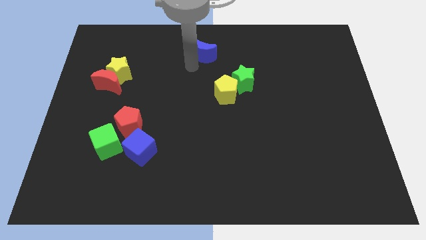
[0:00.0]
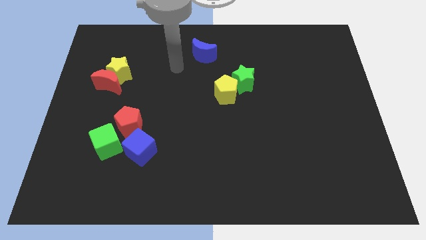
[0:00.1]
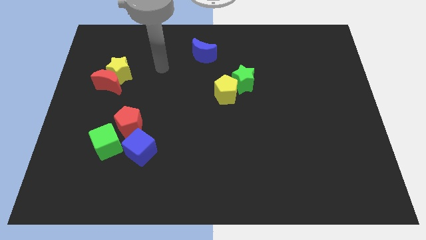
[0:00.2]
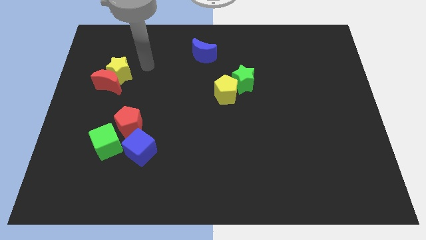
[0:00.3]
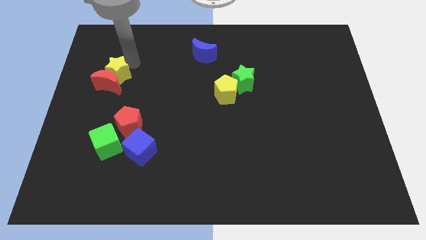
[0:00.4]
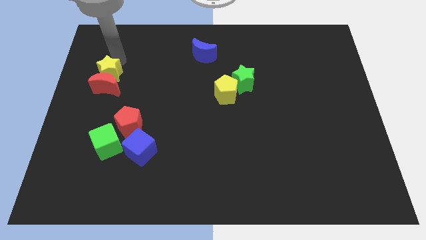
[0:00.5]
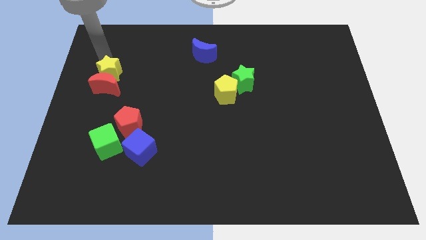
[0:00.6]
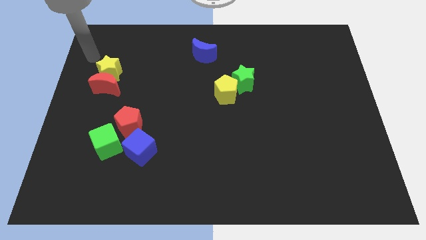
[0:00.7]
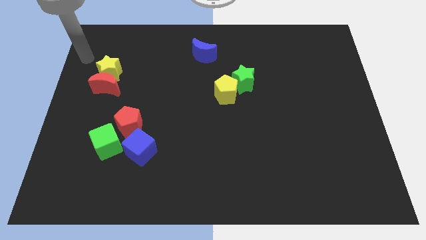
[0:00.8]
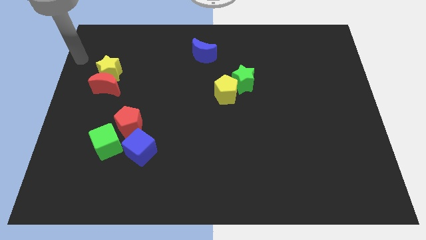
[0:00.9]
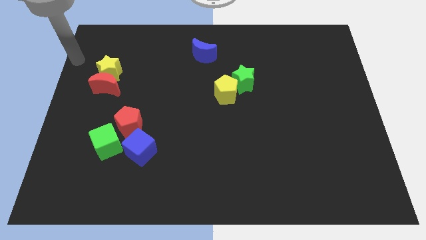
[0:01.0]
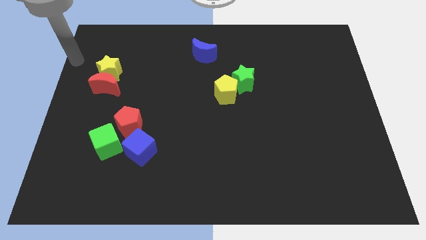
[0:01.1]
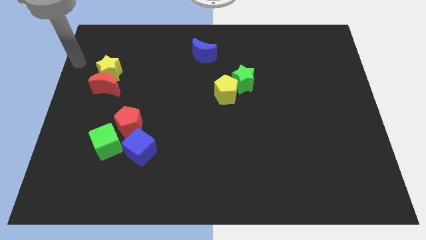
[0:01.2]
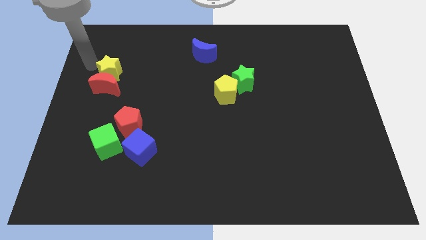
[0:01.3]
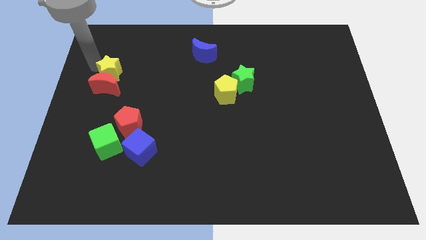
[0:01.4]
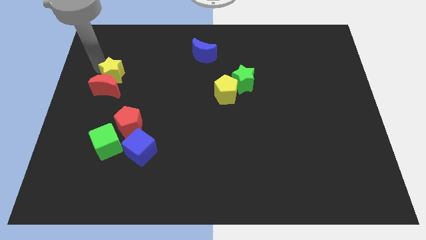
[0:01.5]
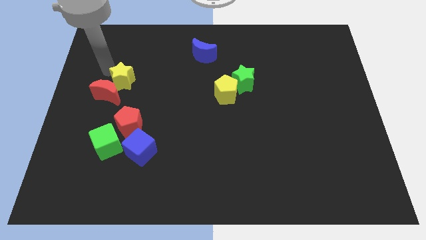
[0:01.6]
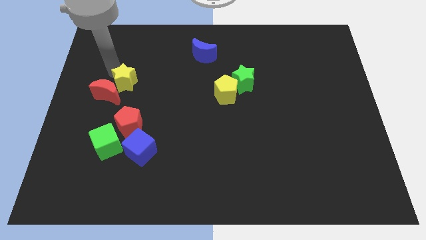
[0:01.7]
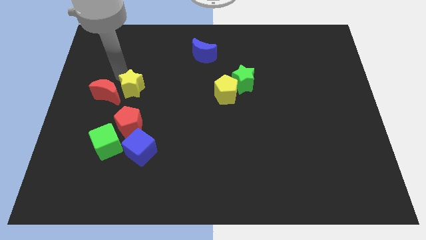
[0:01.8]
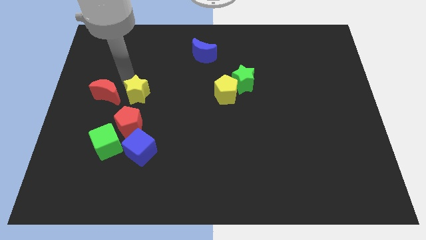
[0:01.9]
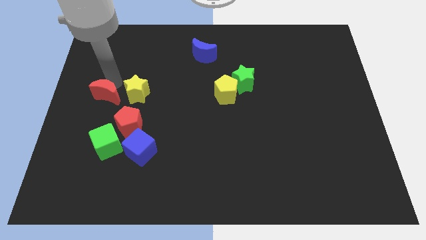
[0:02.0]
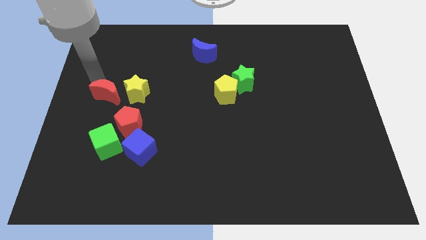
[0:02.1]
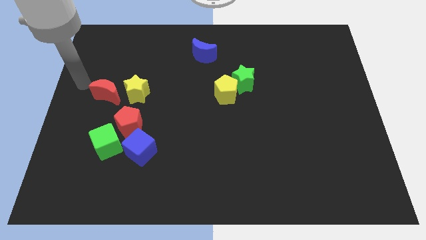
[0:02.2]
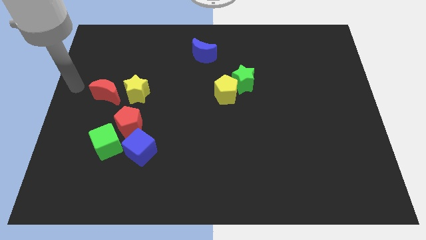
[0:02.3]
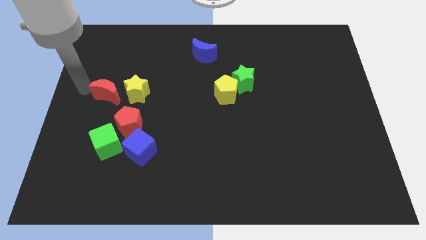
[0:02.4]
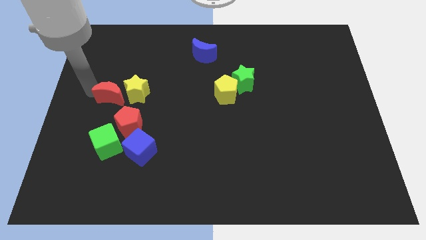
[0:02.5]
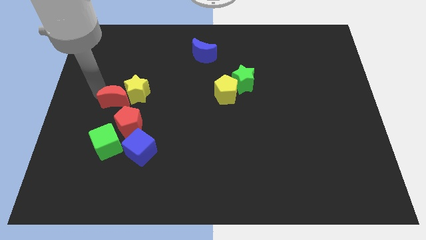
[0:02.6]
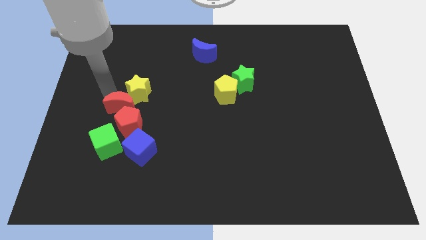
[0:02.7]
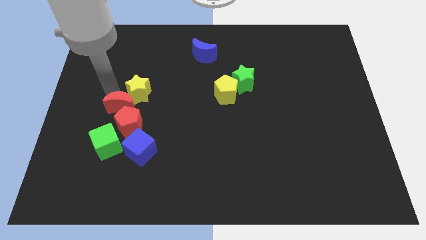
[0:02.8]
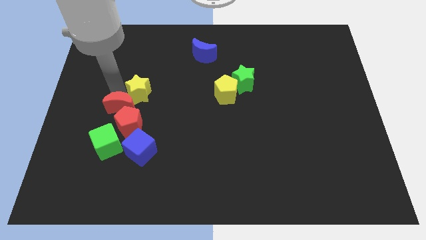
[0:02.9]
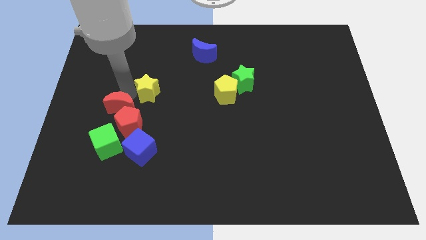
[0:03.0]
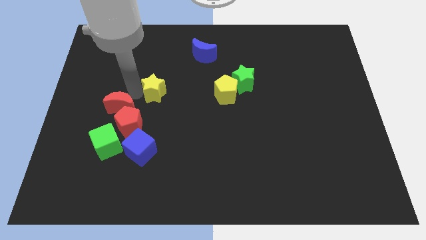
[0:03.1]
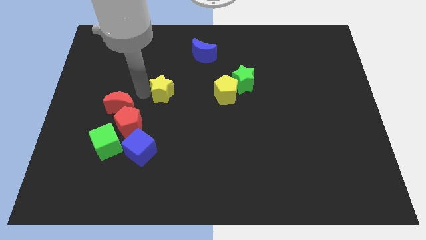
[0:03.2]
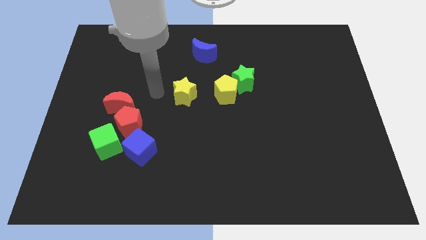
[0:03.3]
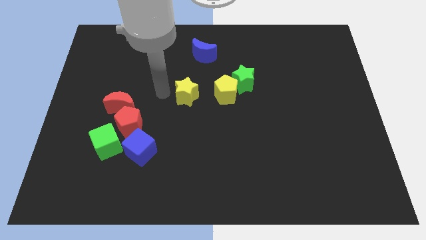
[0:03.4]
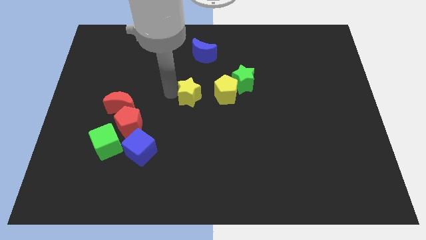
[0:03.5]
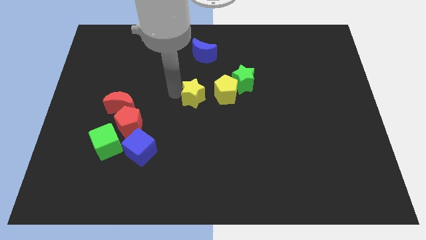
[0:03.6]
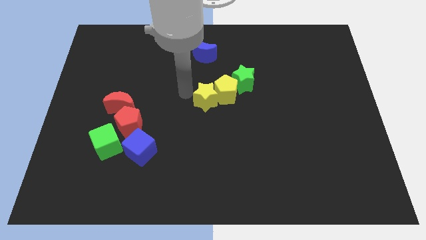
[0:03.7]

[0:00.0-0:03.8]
slide the red blocks and the yellow blocks diagonal to each other

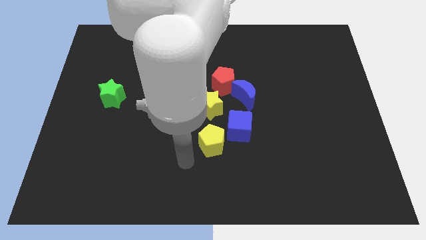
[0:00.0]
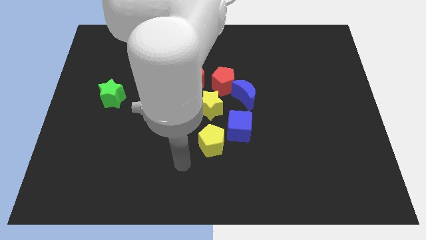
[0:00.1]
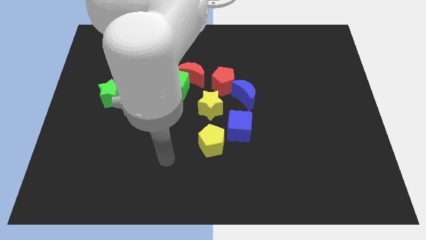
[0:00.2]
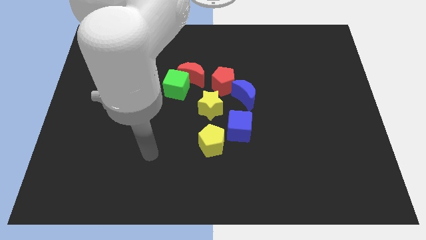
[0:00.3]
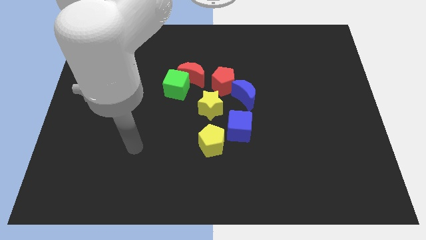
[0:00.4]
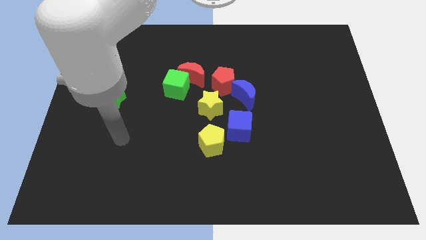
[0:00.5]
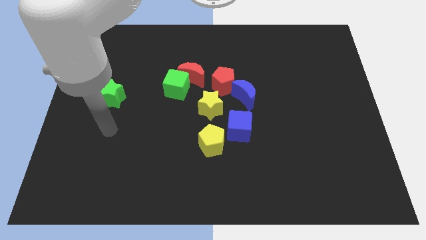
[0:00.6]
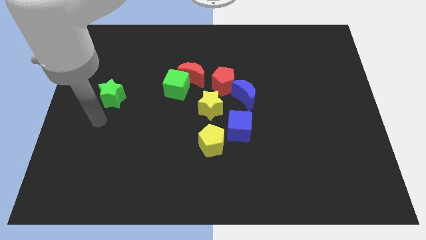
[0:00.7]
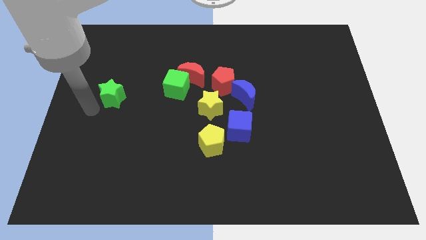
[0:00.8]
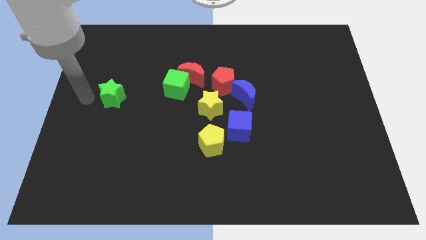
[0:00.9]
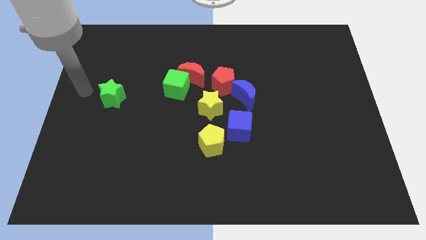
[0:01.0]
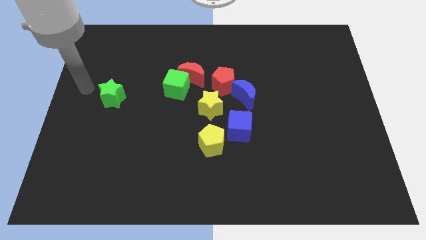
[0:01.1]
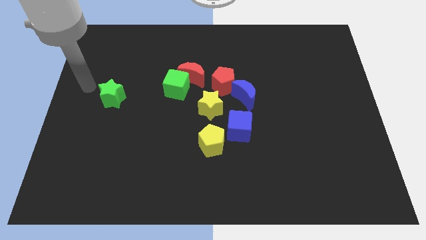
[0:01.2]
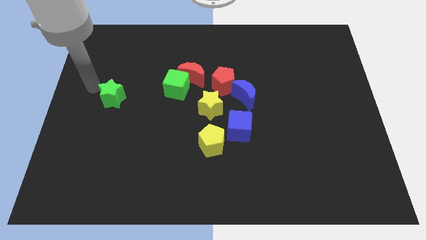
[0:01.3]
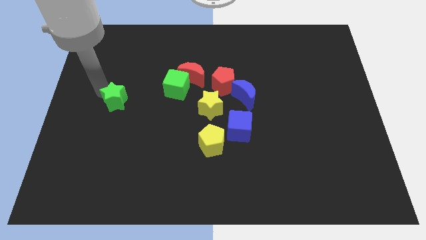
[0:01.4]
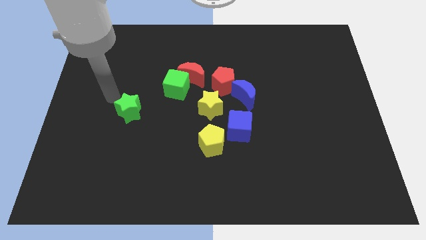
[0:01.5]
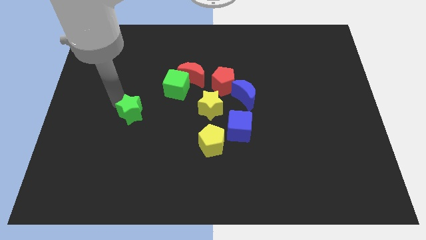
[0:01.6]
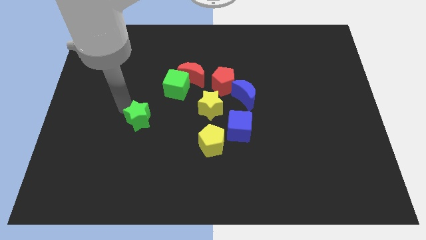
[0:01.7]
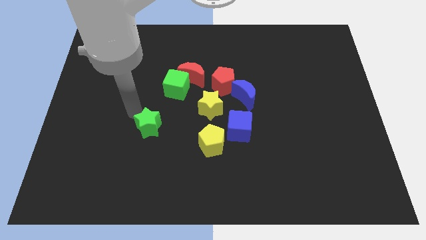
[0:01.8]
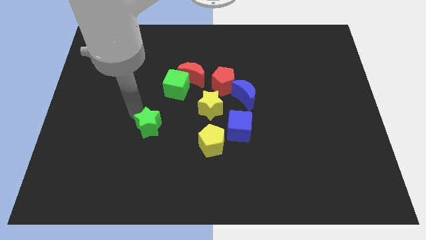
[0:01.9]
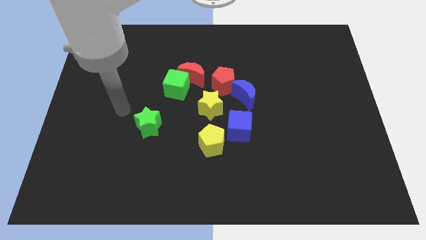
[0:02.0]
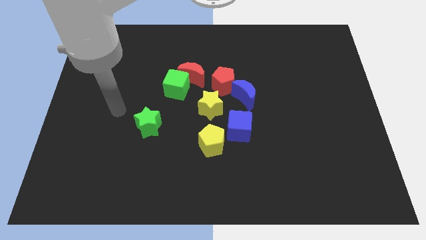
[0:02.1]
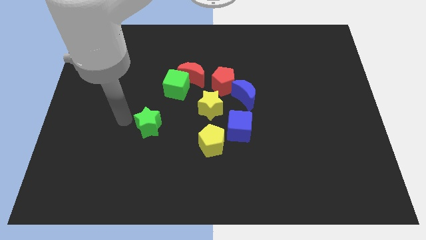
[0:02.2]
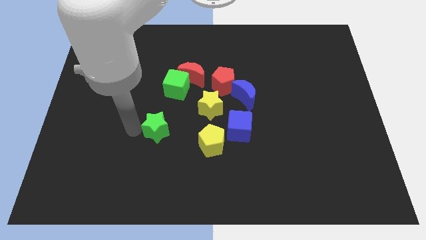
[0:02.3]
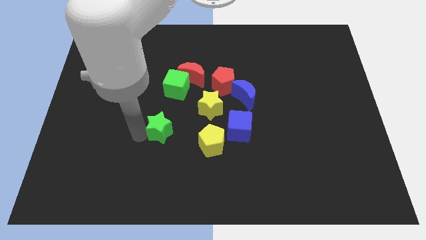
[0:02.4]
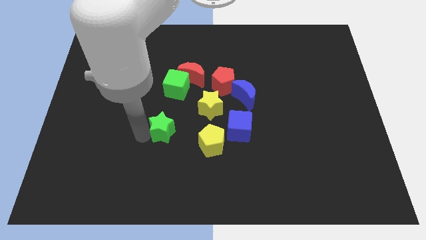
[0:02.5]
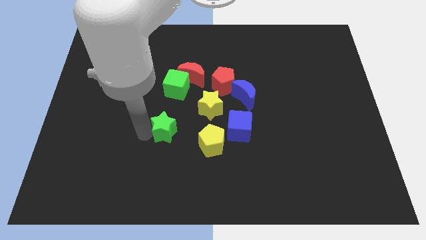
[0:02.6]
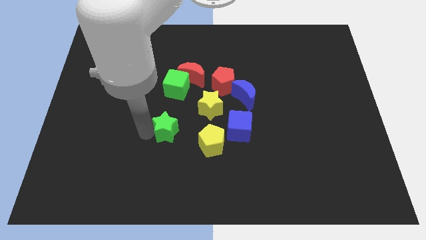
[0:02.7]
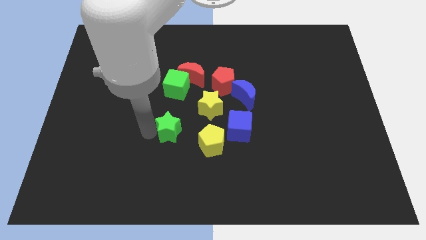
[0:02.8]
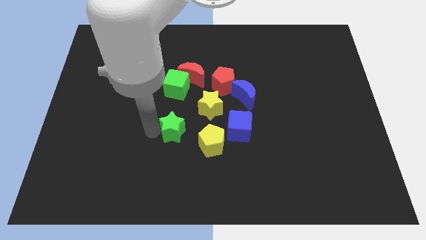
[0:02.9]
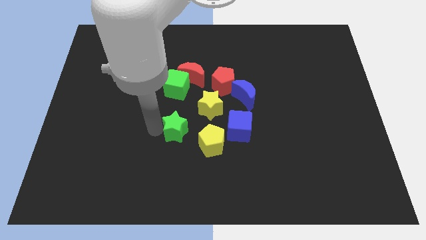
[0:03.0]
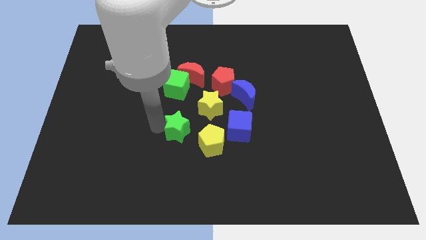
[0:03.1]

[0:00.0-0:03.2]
push the green star towards the yellow pentagon

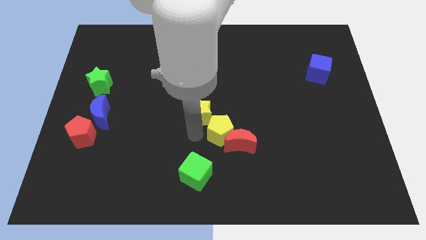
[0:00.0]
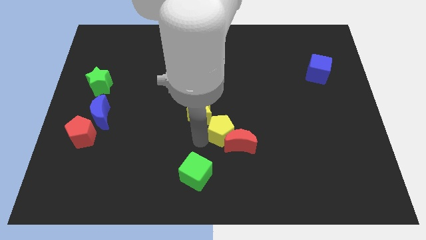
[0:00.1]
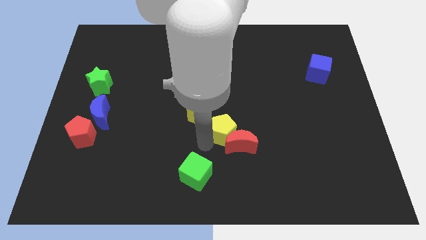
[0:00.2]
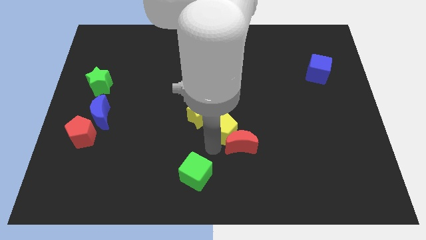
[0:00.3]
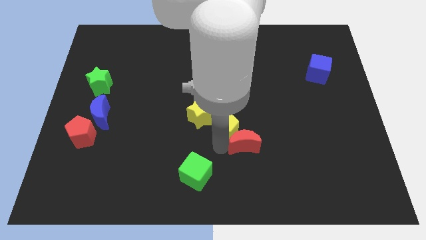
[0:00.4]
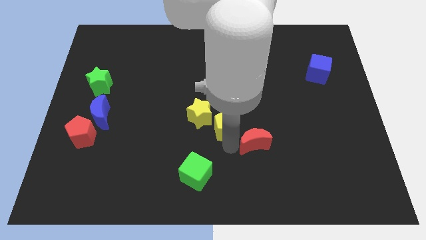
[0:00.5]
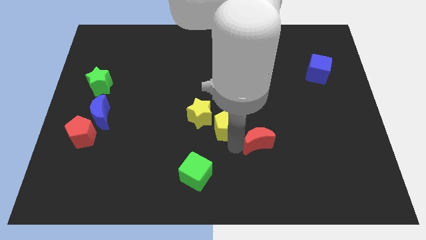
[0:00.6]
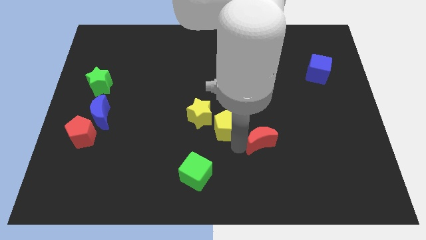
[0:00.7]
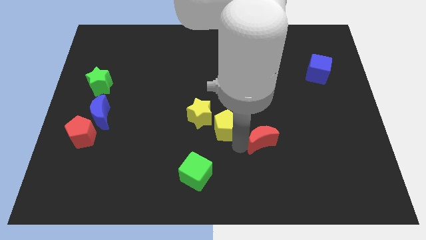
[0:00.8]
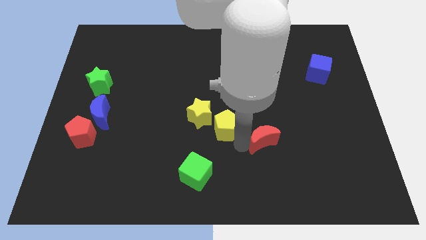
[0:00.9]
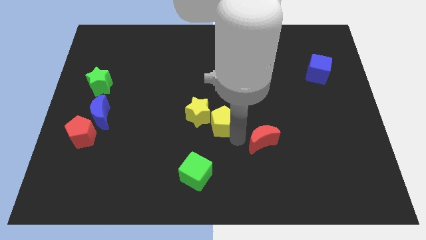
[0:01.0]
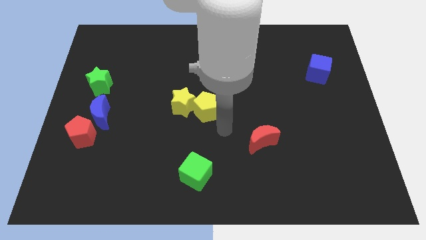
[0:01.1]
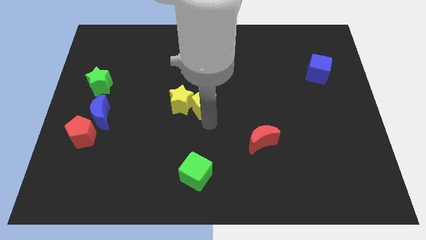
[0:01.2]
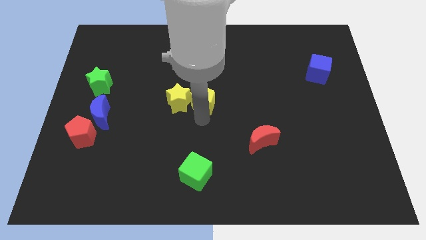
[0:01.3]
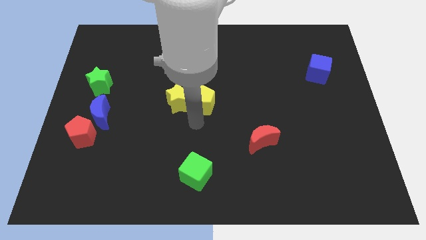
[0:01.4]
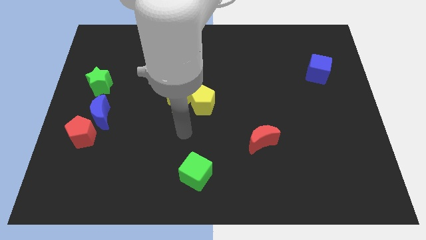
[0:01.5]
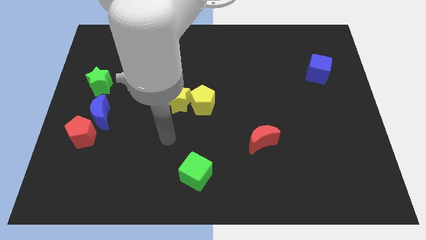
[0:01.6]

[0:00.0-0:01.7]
separate the red moon from both the yellow blocks

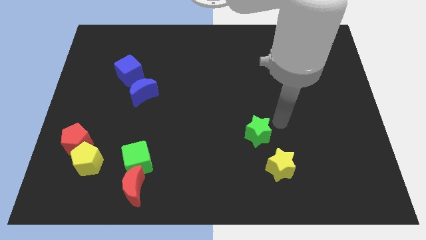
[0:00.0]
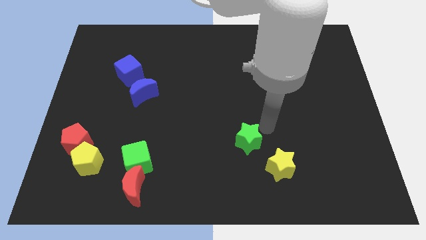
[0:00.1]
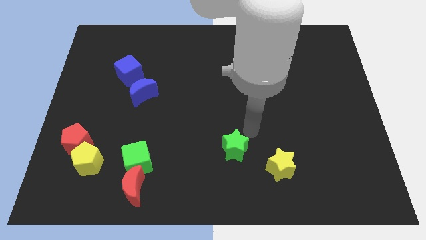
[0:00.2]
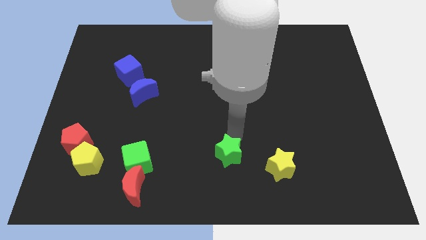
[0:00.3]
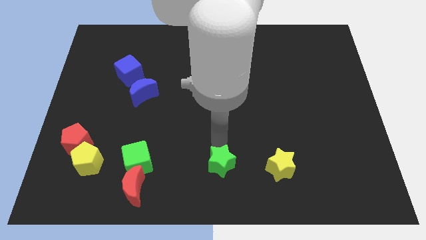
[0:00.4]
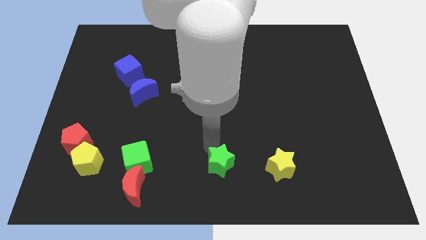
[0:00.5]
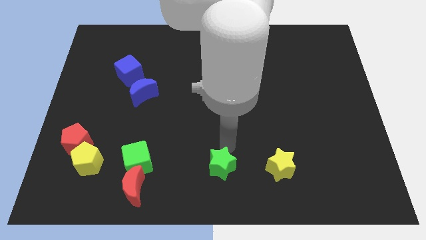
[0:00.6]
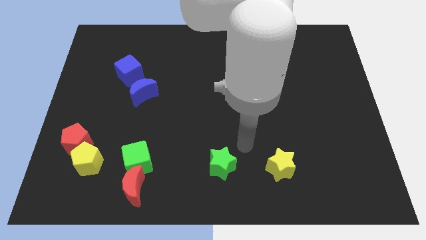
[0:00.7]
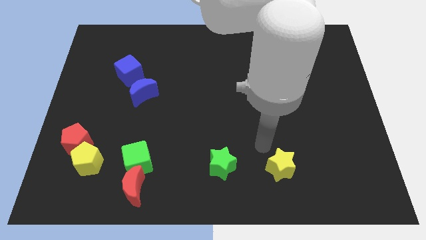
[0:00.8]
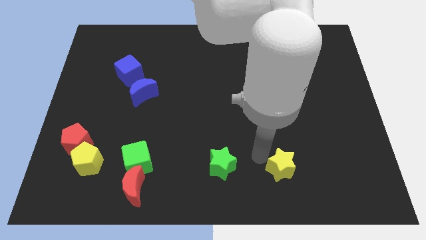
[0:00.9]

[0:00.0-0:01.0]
place green star parallel left to yellow star
